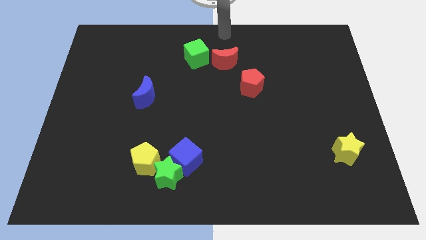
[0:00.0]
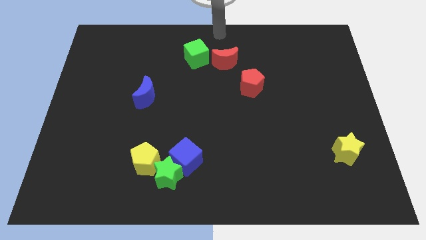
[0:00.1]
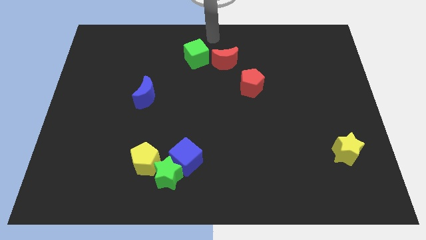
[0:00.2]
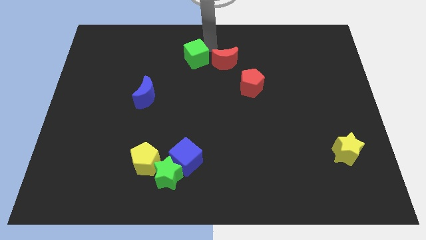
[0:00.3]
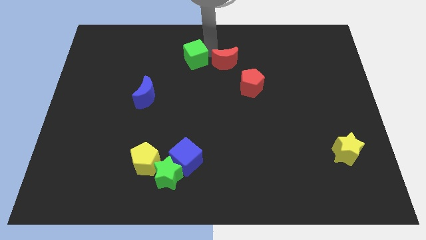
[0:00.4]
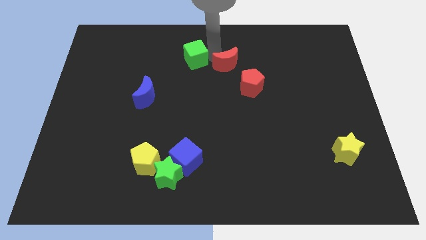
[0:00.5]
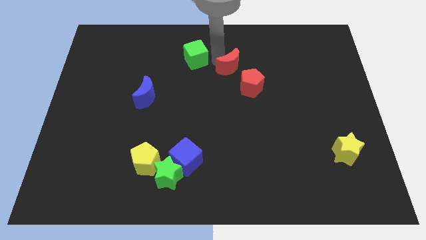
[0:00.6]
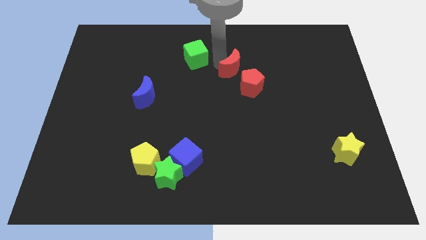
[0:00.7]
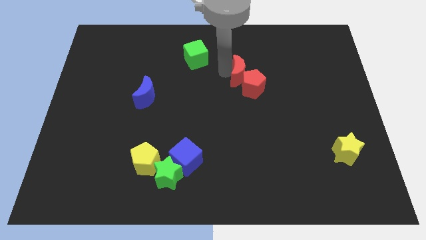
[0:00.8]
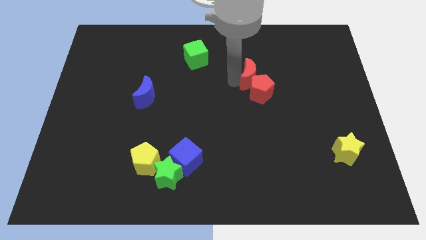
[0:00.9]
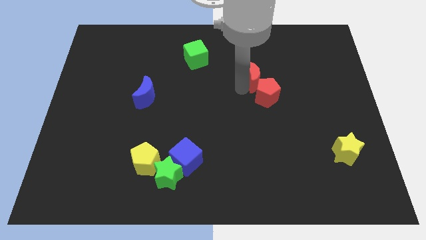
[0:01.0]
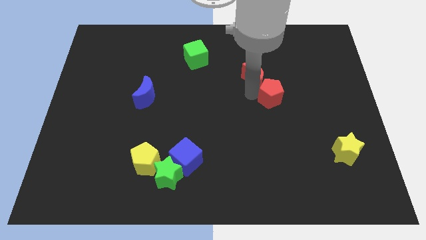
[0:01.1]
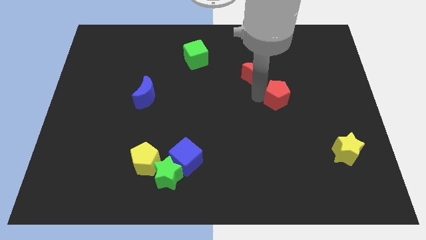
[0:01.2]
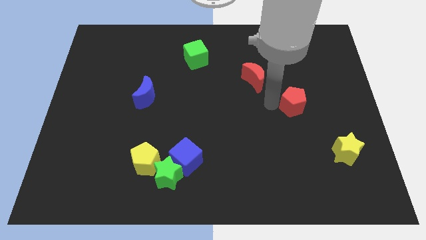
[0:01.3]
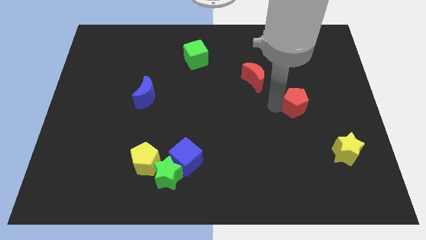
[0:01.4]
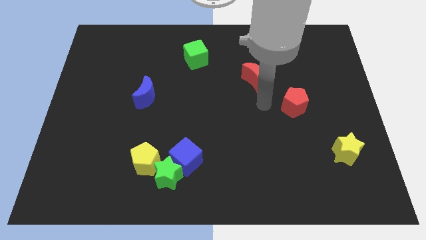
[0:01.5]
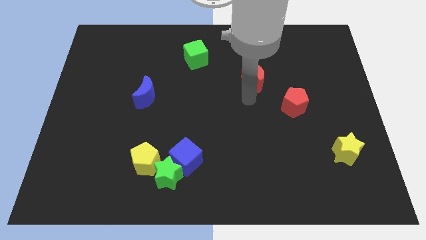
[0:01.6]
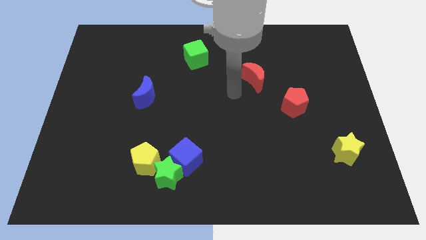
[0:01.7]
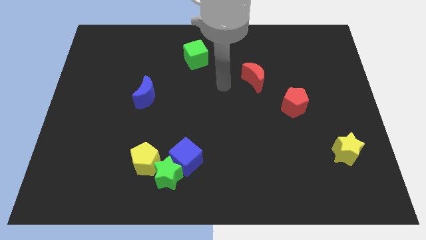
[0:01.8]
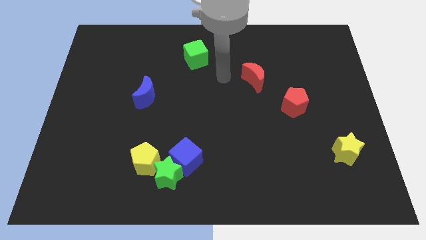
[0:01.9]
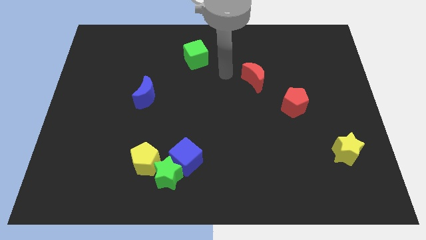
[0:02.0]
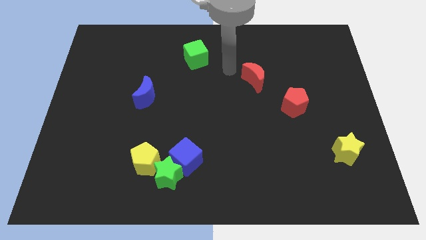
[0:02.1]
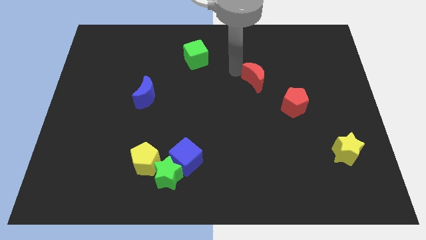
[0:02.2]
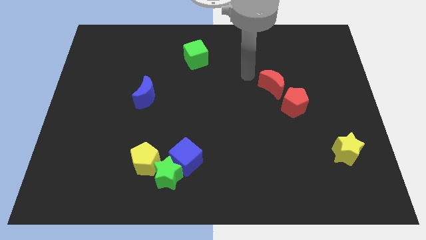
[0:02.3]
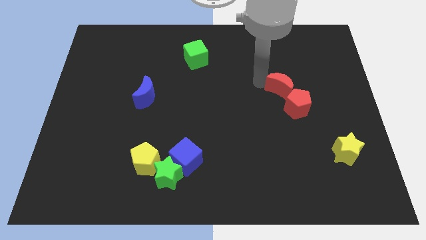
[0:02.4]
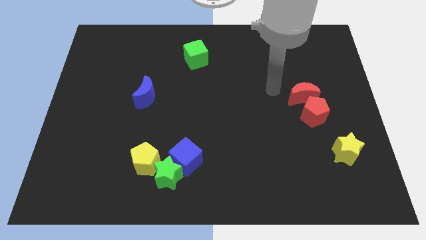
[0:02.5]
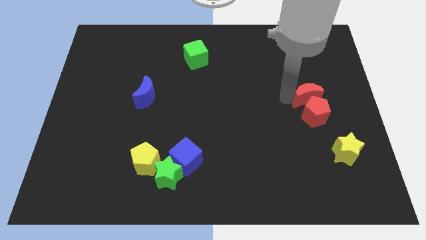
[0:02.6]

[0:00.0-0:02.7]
move the red moon and red pentagon towards the center right side

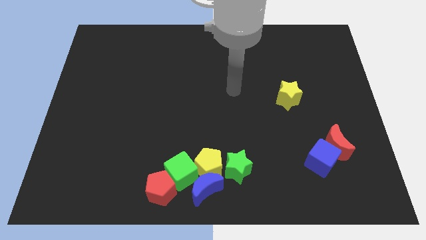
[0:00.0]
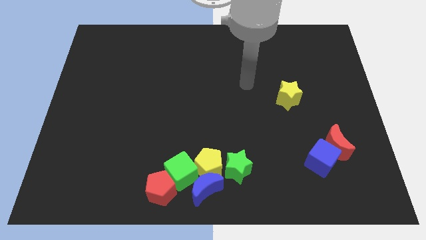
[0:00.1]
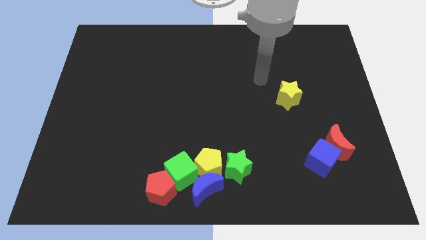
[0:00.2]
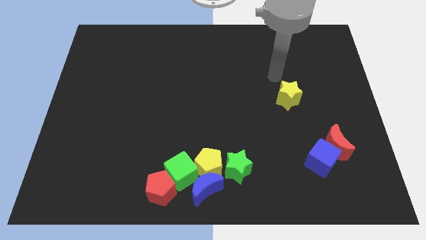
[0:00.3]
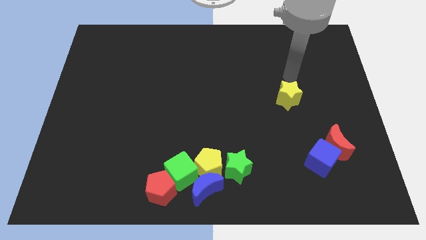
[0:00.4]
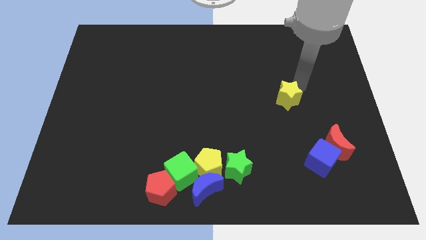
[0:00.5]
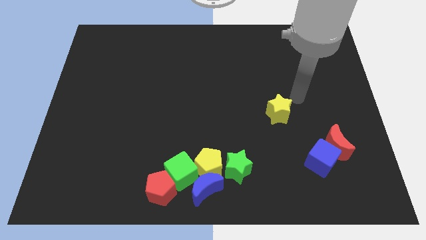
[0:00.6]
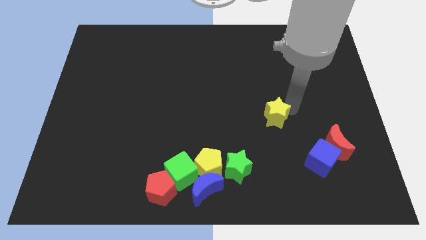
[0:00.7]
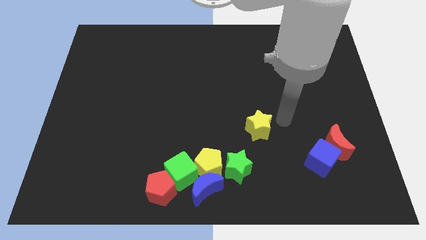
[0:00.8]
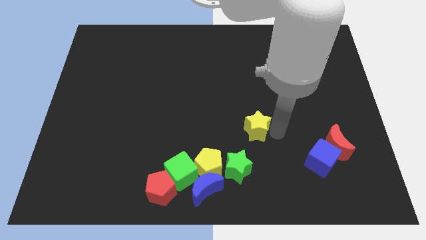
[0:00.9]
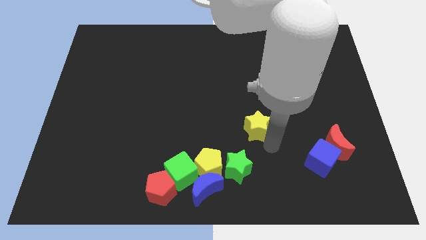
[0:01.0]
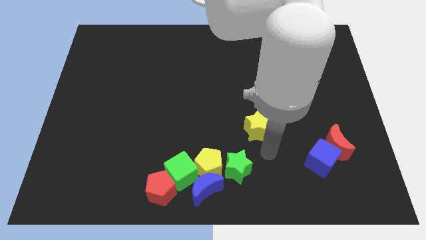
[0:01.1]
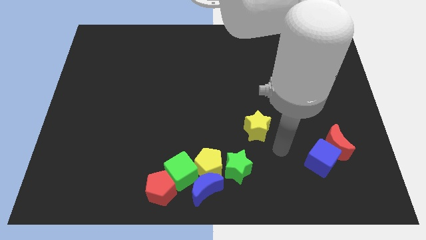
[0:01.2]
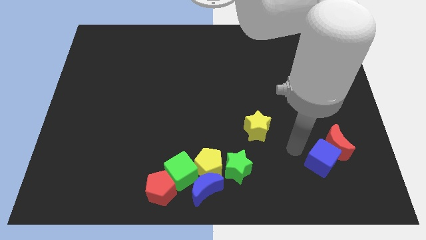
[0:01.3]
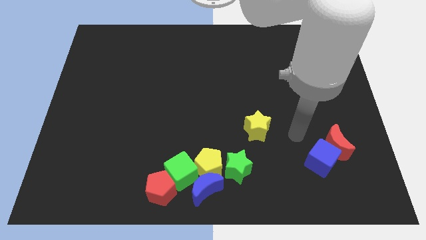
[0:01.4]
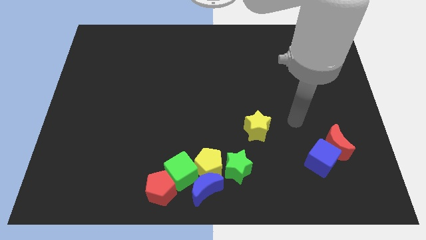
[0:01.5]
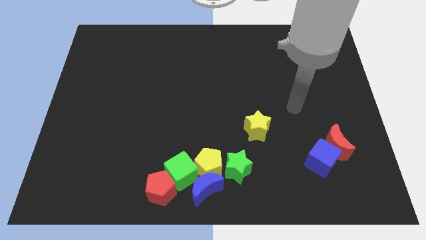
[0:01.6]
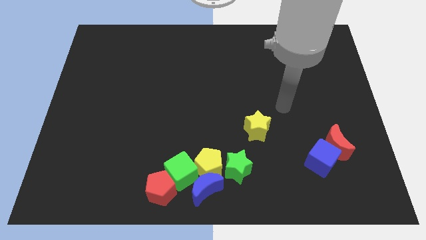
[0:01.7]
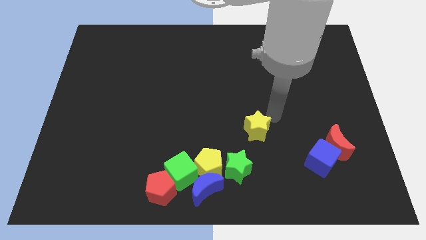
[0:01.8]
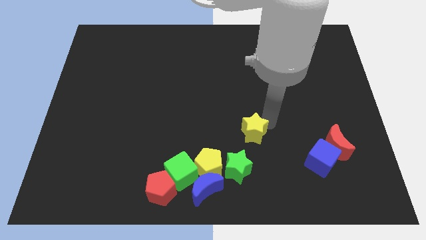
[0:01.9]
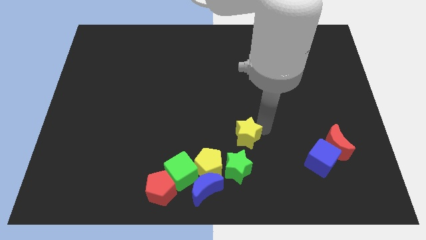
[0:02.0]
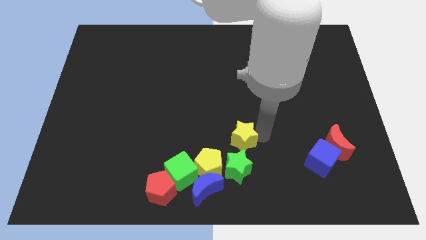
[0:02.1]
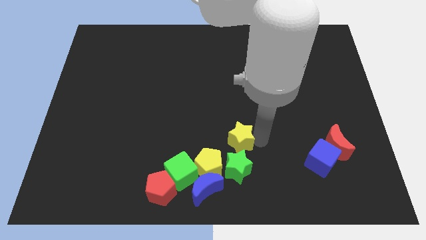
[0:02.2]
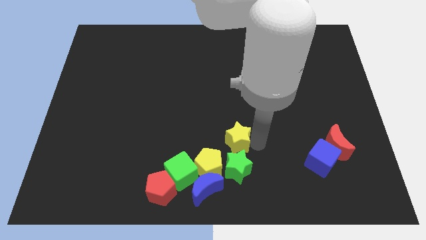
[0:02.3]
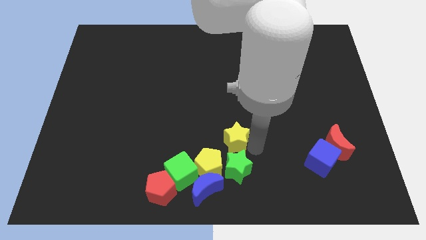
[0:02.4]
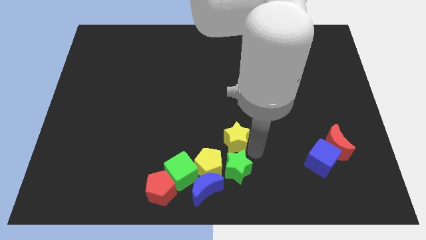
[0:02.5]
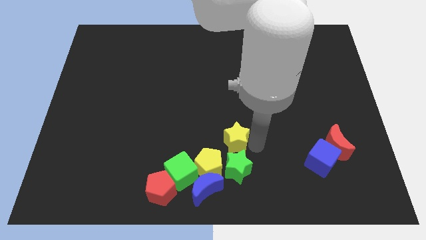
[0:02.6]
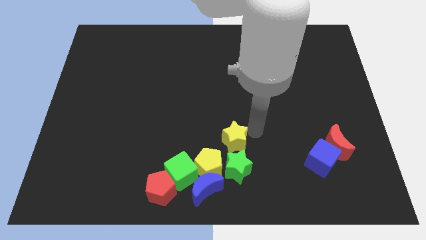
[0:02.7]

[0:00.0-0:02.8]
push yellow star to the top of green star

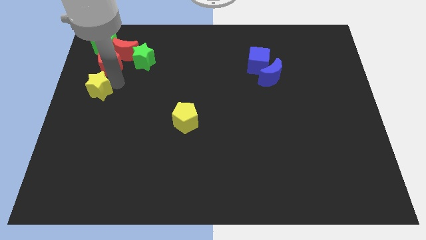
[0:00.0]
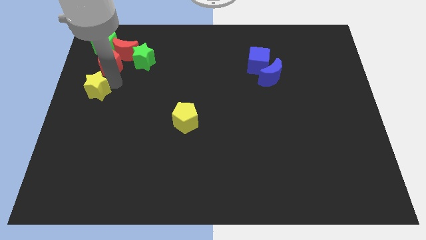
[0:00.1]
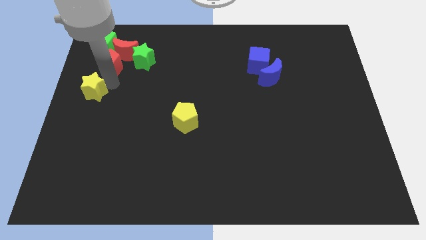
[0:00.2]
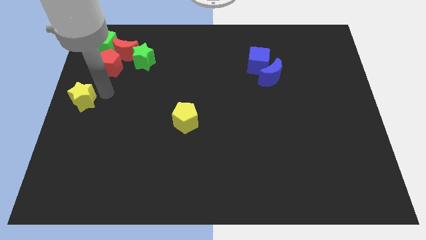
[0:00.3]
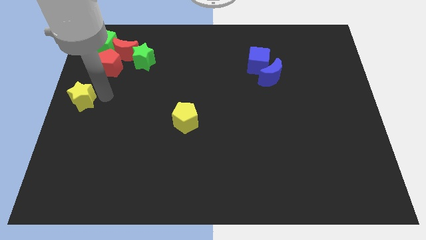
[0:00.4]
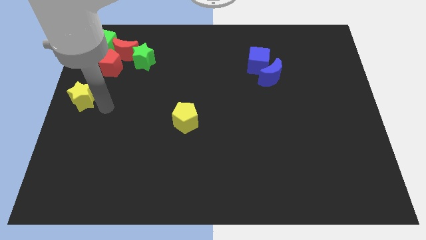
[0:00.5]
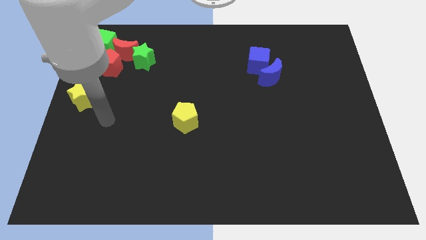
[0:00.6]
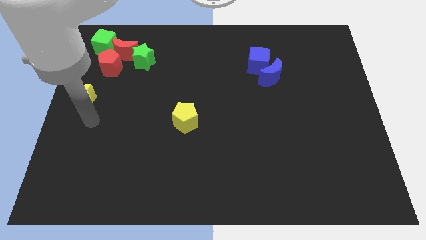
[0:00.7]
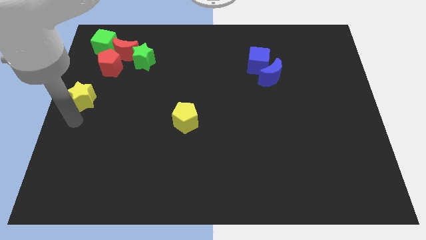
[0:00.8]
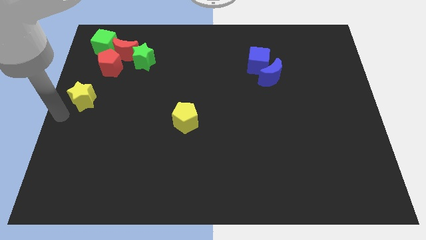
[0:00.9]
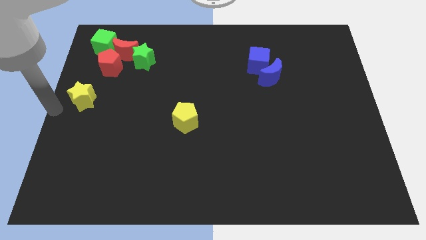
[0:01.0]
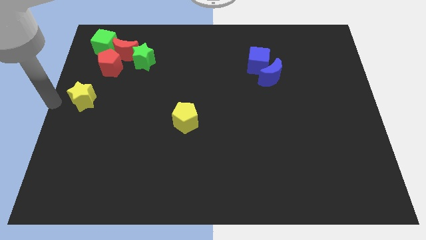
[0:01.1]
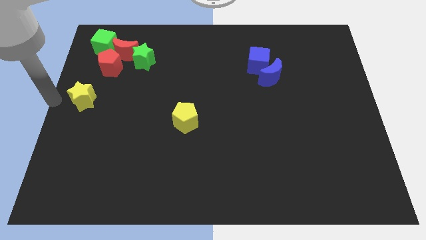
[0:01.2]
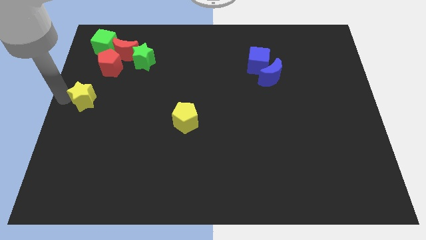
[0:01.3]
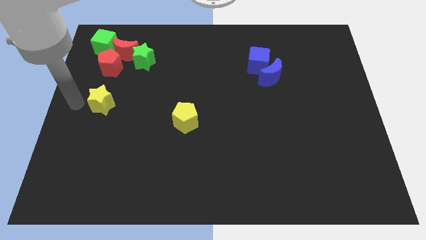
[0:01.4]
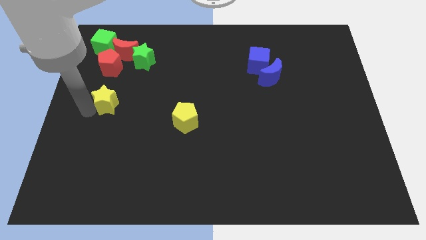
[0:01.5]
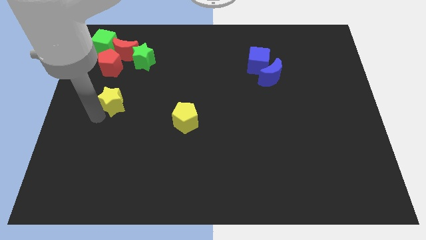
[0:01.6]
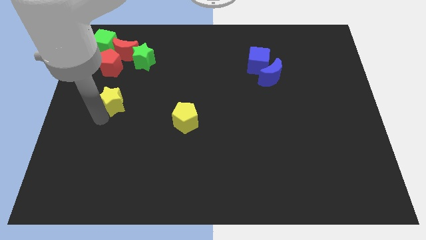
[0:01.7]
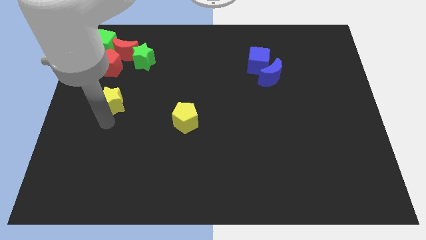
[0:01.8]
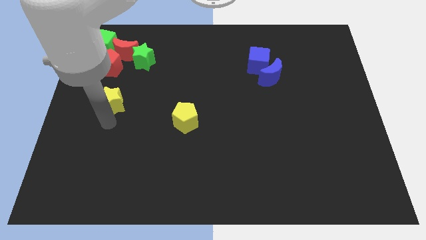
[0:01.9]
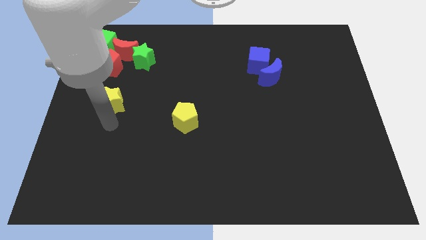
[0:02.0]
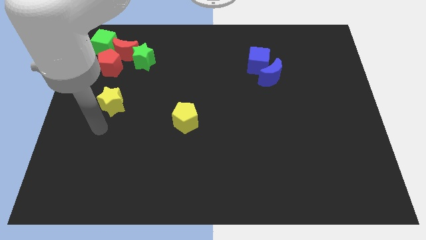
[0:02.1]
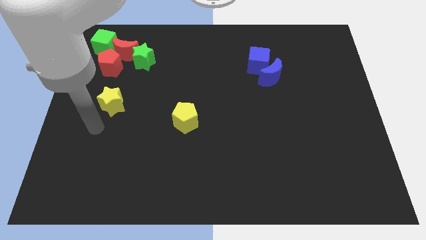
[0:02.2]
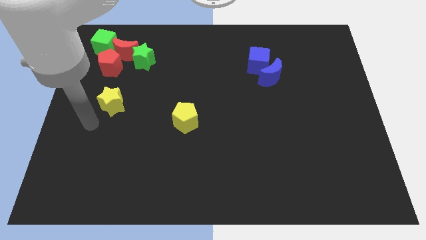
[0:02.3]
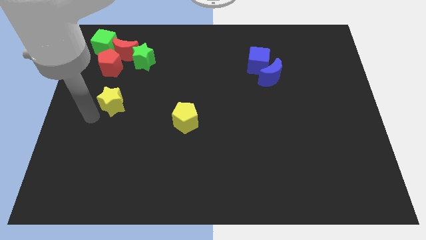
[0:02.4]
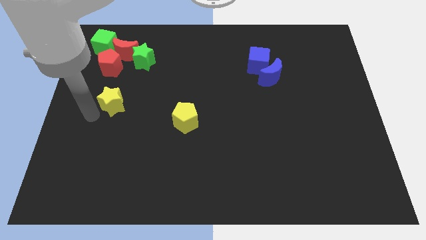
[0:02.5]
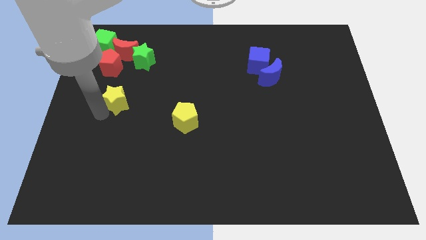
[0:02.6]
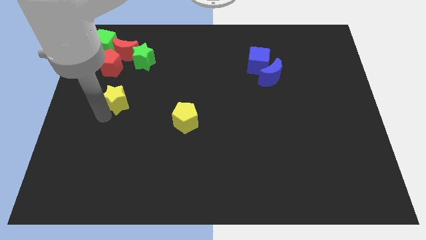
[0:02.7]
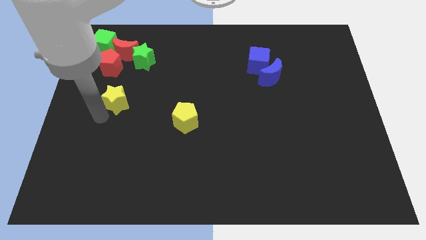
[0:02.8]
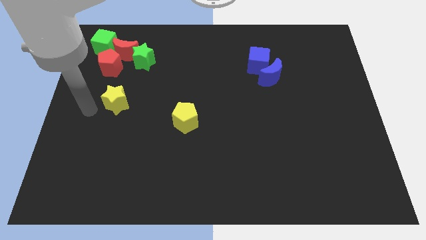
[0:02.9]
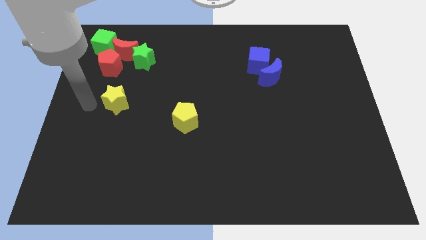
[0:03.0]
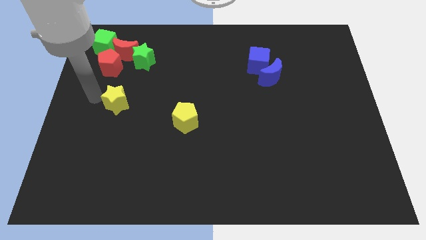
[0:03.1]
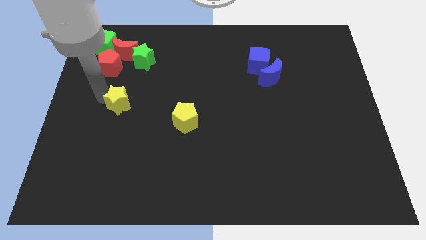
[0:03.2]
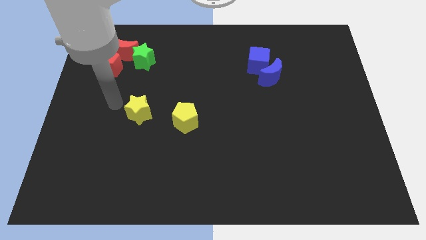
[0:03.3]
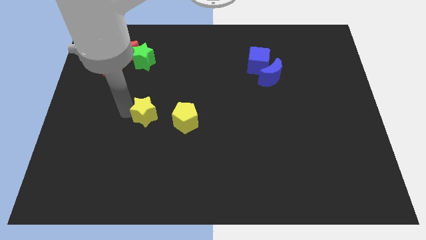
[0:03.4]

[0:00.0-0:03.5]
push the yellow star to the left of the yellow pentagon
